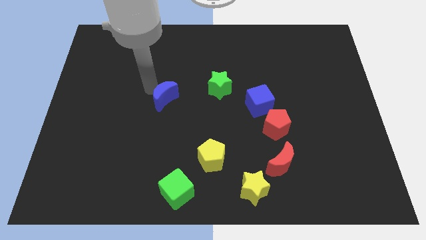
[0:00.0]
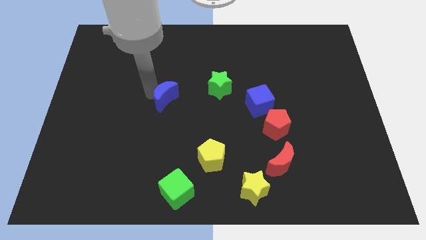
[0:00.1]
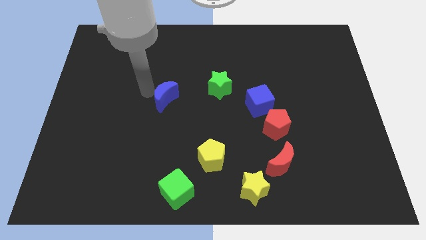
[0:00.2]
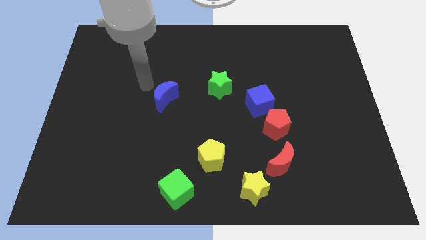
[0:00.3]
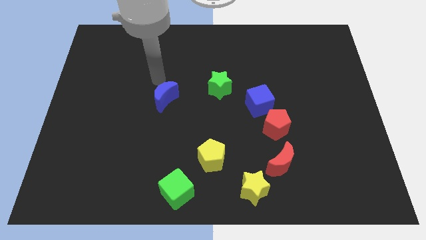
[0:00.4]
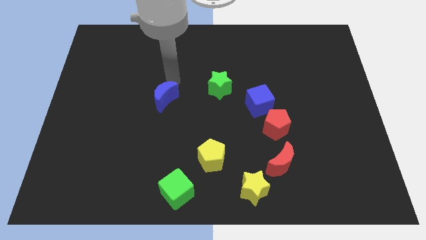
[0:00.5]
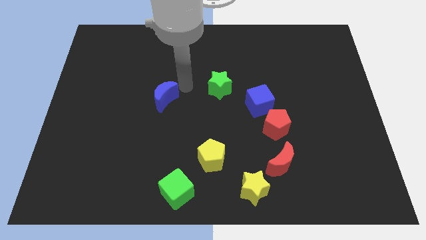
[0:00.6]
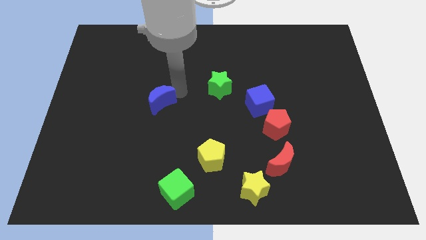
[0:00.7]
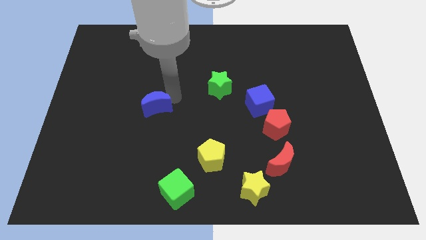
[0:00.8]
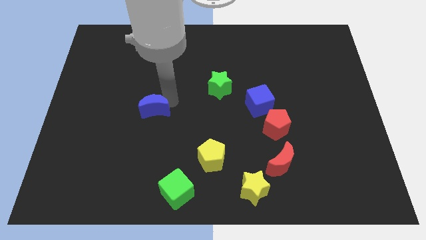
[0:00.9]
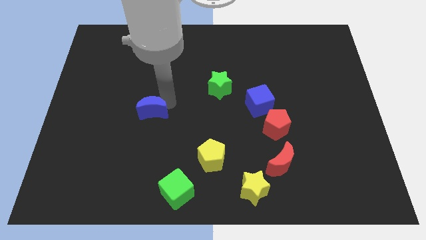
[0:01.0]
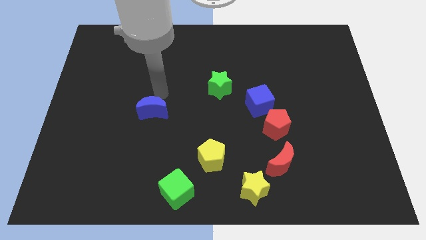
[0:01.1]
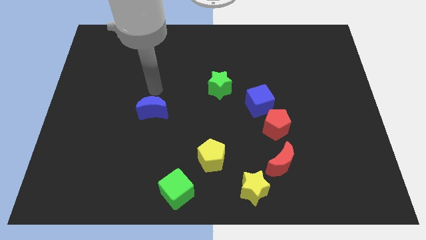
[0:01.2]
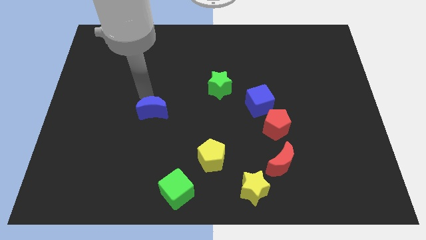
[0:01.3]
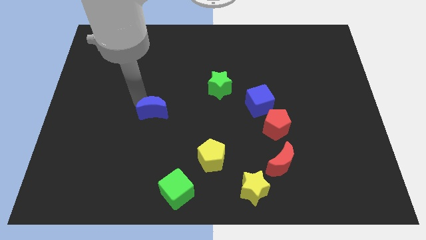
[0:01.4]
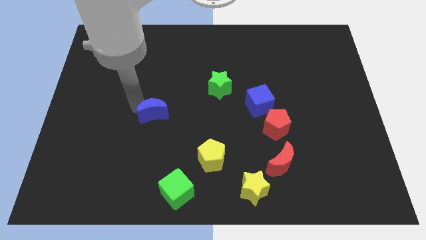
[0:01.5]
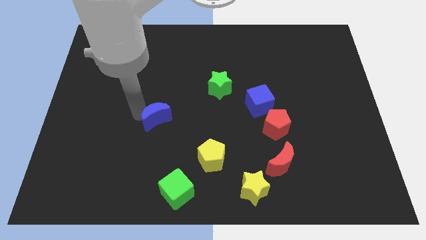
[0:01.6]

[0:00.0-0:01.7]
move the blue moon to the center

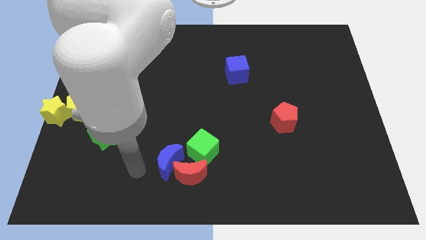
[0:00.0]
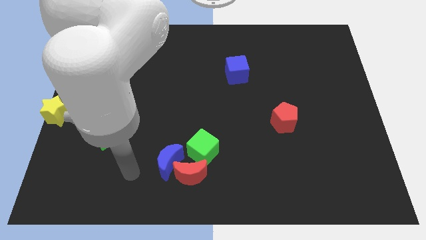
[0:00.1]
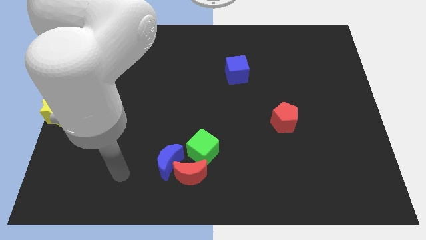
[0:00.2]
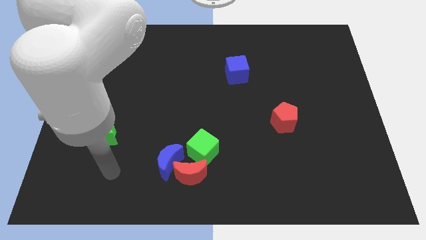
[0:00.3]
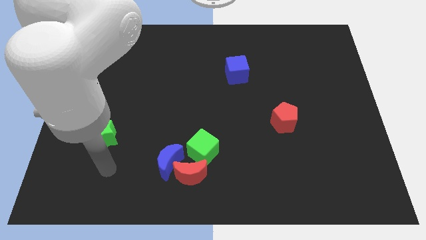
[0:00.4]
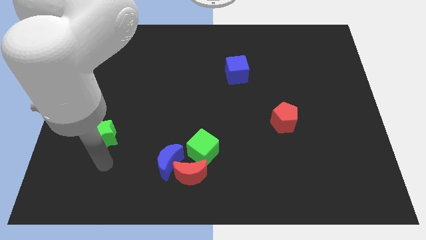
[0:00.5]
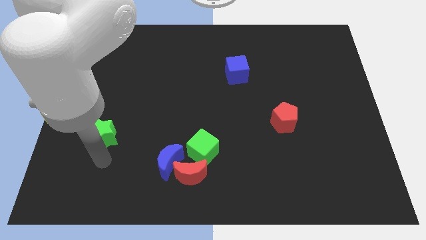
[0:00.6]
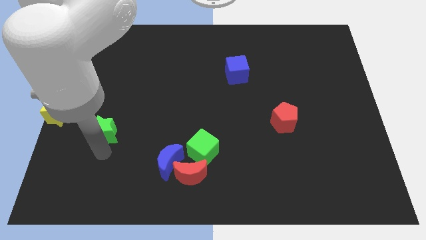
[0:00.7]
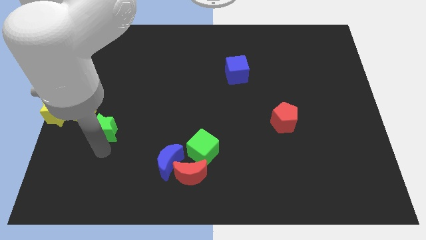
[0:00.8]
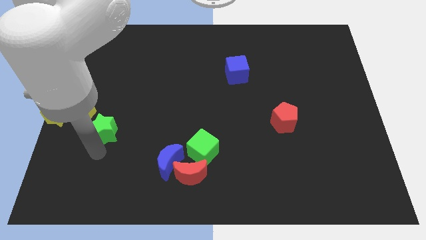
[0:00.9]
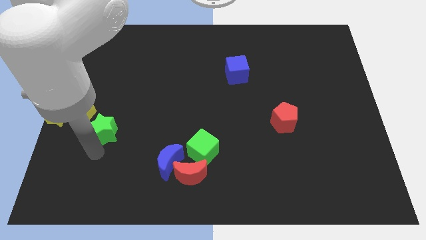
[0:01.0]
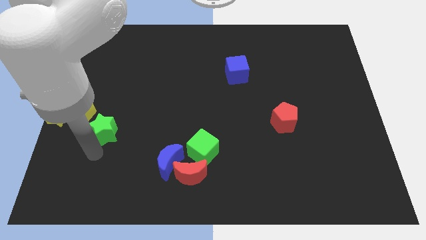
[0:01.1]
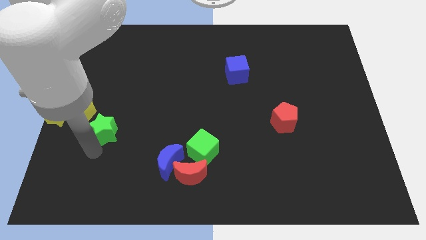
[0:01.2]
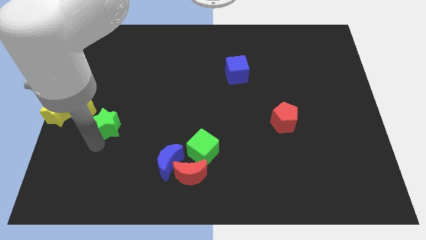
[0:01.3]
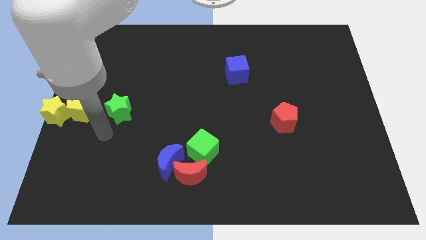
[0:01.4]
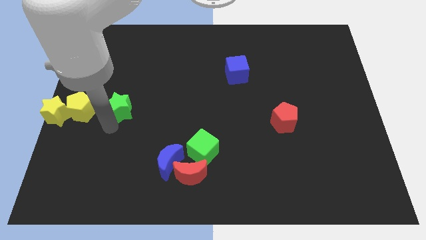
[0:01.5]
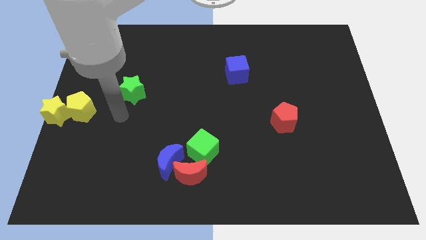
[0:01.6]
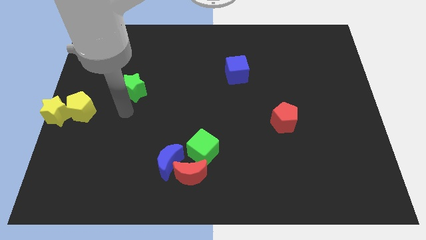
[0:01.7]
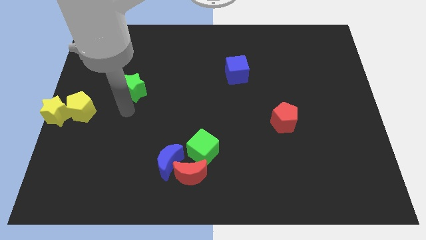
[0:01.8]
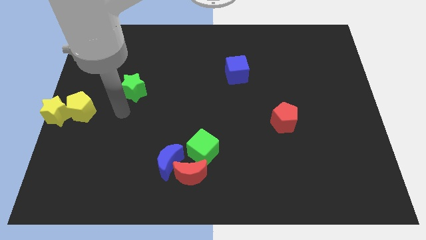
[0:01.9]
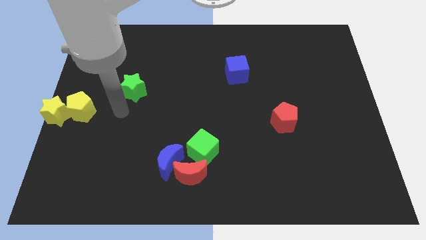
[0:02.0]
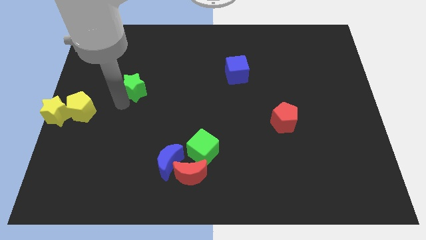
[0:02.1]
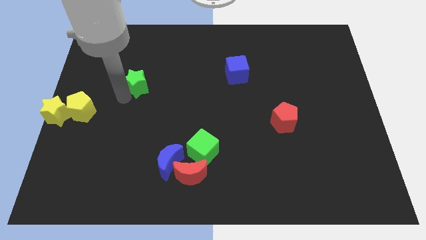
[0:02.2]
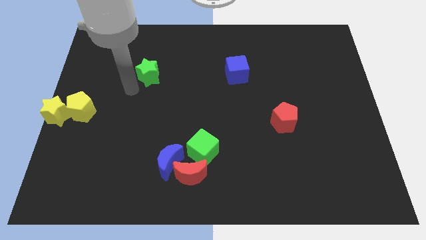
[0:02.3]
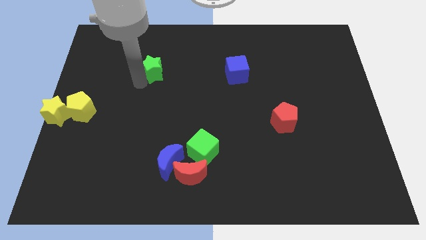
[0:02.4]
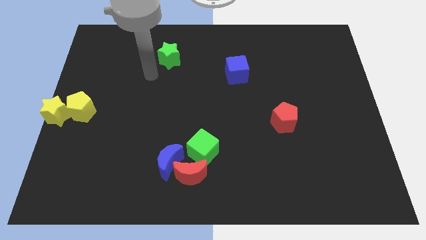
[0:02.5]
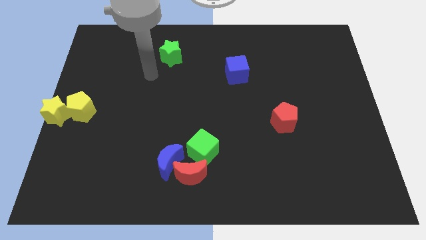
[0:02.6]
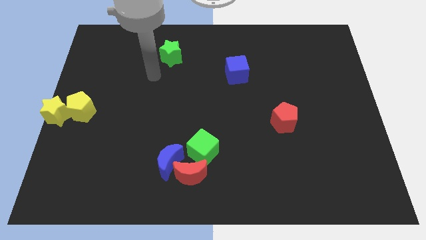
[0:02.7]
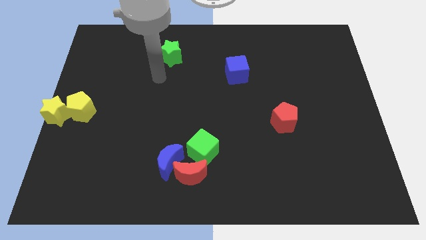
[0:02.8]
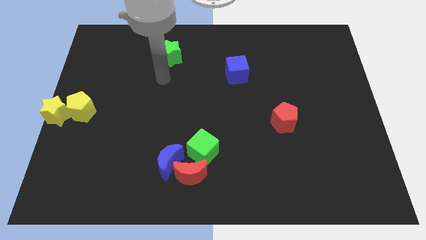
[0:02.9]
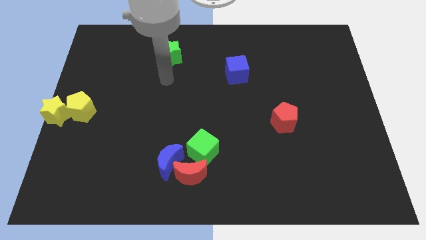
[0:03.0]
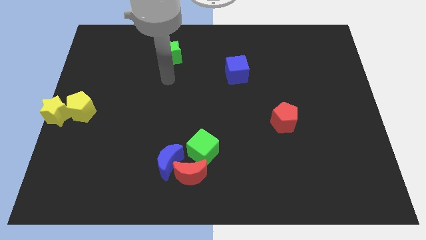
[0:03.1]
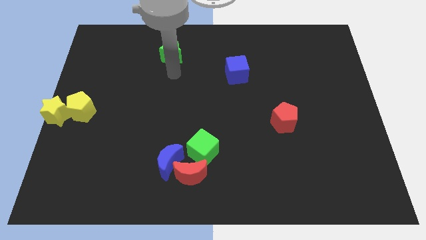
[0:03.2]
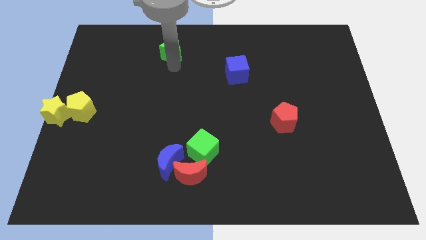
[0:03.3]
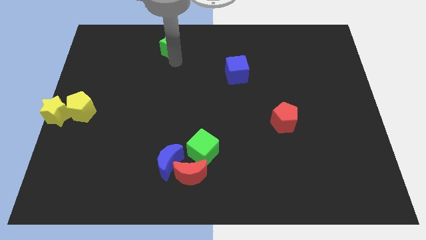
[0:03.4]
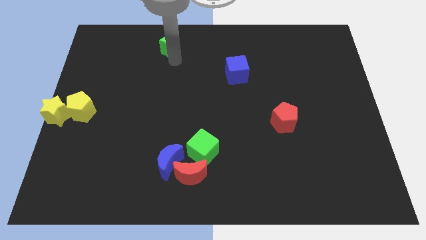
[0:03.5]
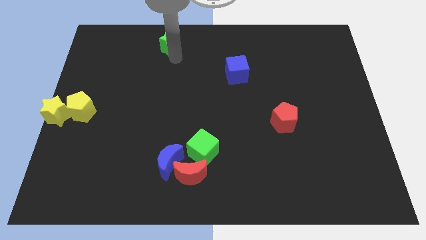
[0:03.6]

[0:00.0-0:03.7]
move the green star to the top of the board

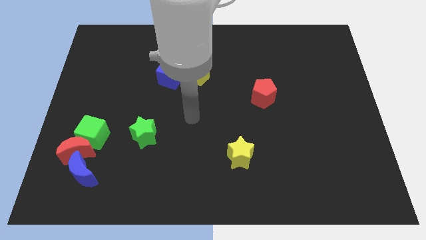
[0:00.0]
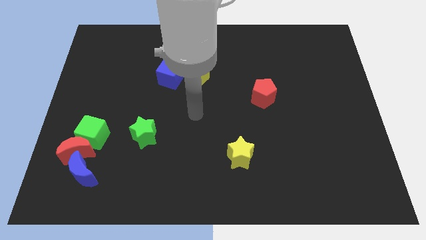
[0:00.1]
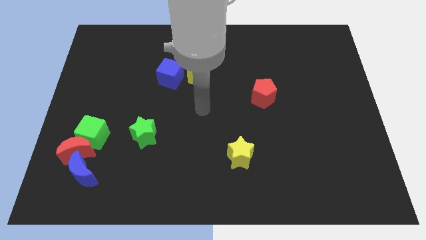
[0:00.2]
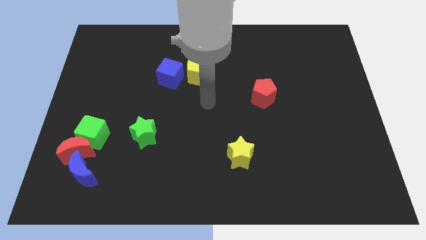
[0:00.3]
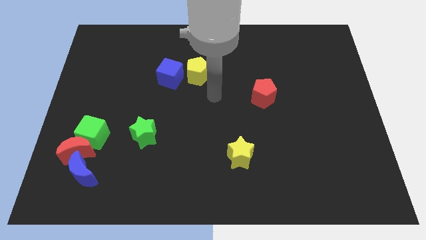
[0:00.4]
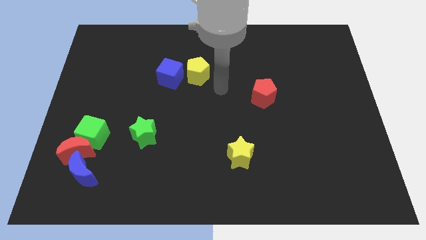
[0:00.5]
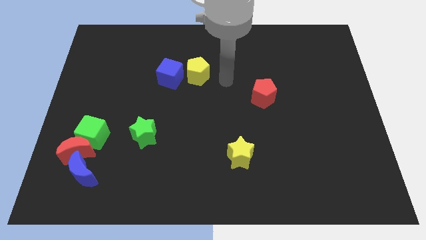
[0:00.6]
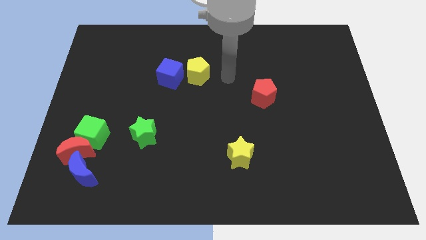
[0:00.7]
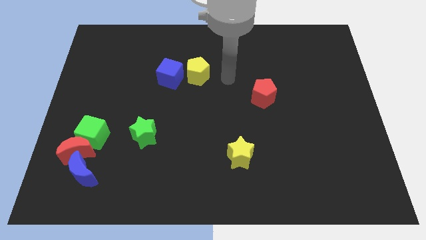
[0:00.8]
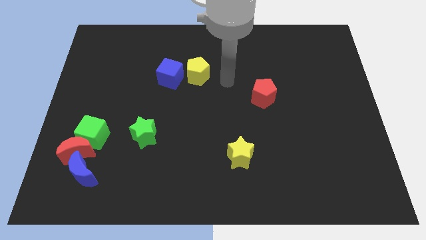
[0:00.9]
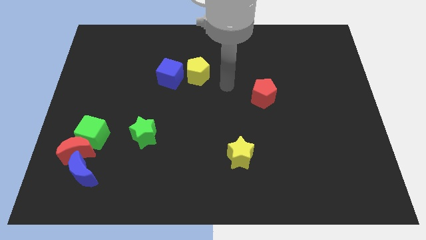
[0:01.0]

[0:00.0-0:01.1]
move your arm to the bottom right of the the yellow pentagon

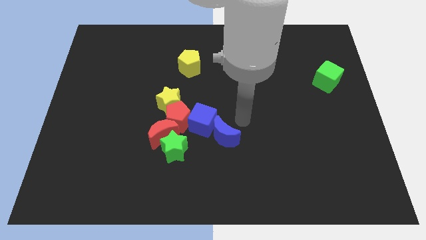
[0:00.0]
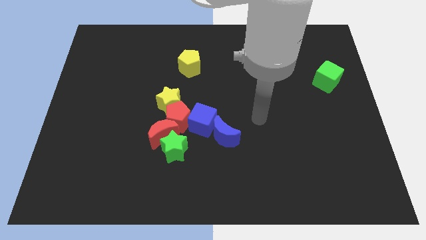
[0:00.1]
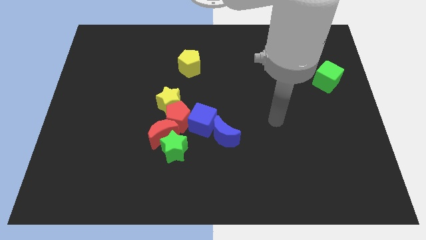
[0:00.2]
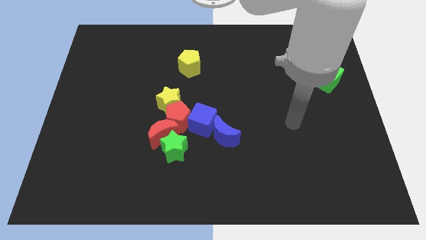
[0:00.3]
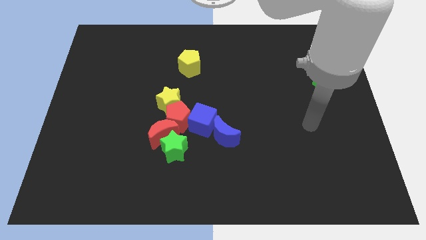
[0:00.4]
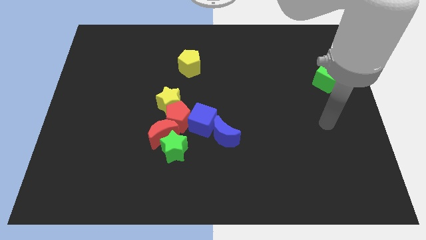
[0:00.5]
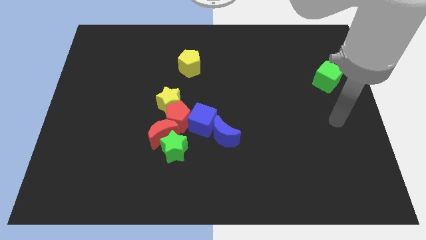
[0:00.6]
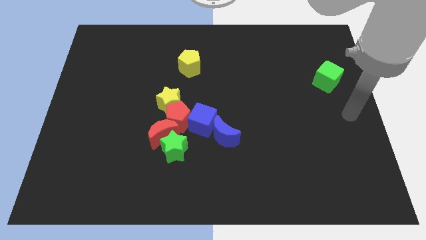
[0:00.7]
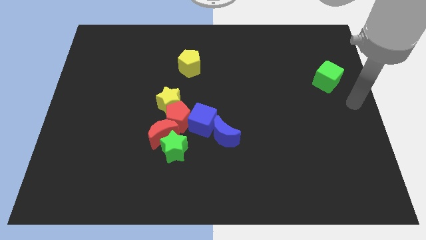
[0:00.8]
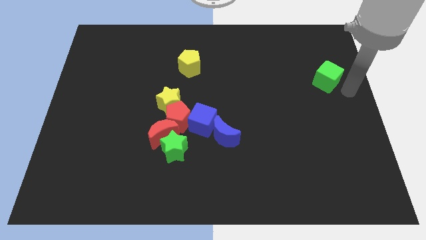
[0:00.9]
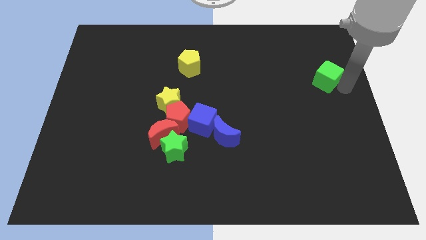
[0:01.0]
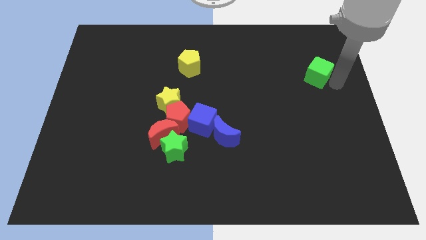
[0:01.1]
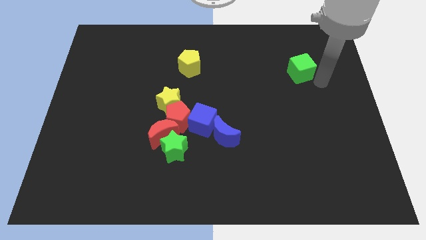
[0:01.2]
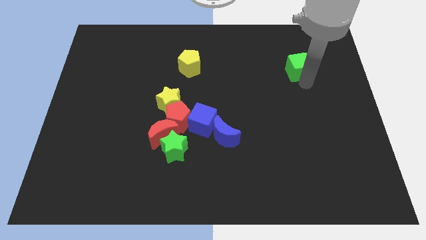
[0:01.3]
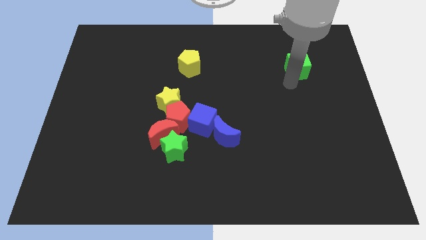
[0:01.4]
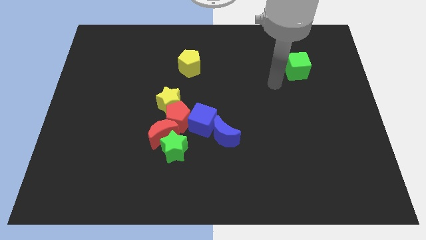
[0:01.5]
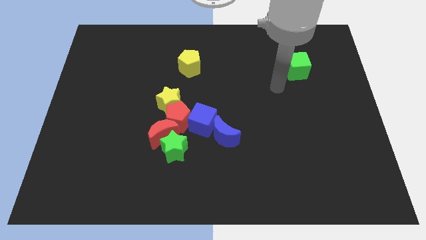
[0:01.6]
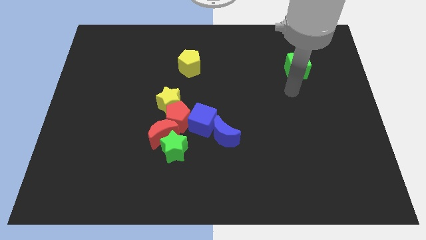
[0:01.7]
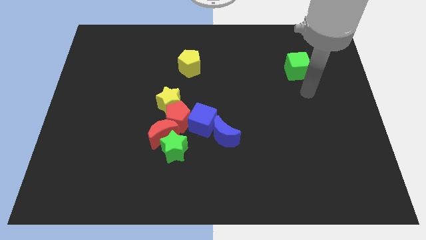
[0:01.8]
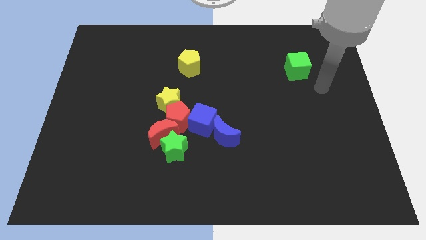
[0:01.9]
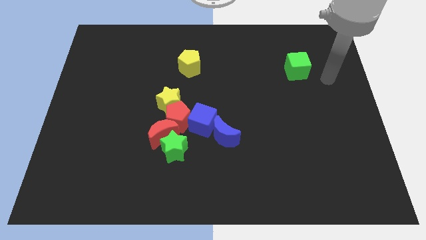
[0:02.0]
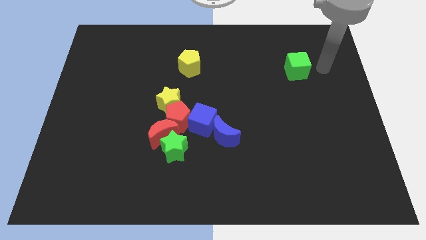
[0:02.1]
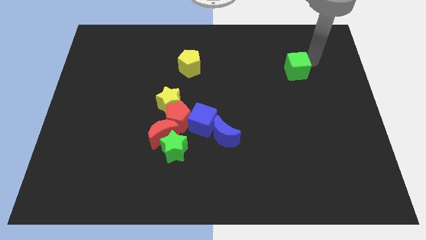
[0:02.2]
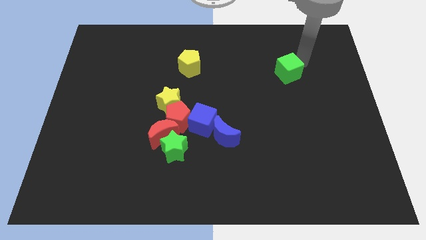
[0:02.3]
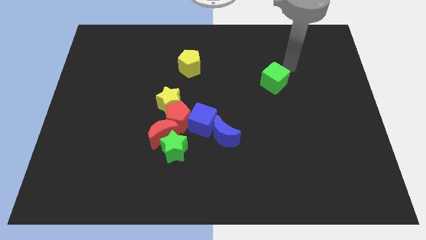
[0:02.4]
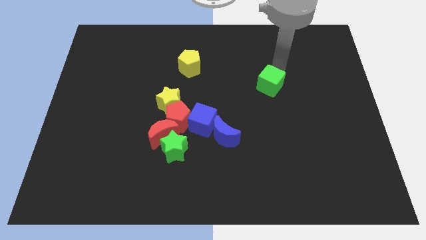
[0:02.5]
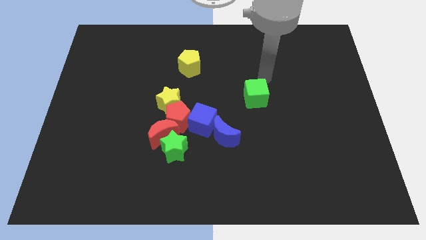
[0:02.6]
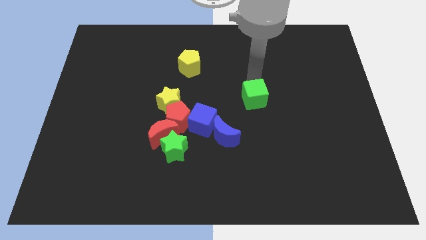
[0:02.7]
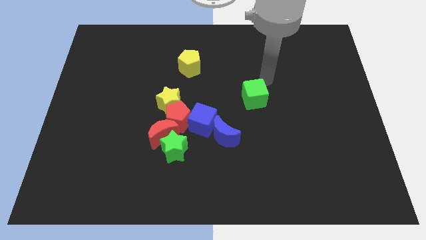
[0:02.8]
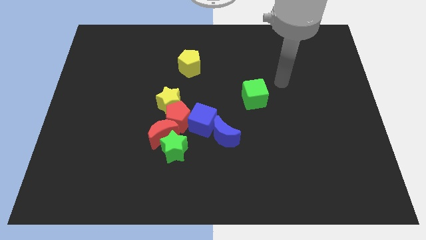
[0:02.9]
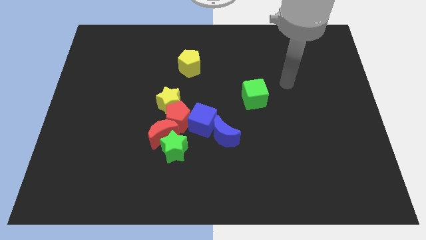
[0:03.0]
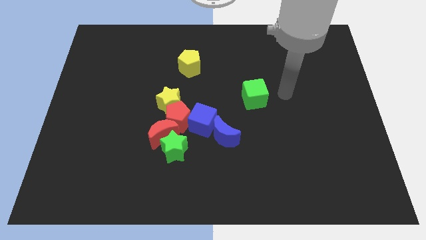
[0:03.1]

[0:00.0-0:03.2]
push the green cube towards the blue blocks
